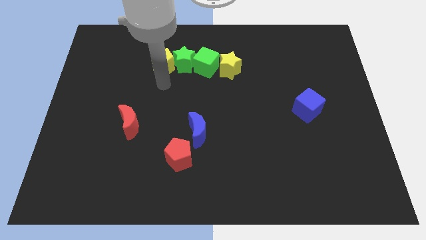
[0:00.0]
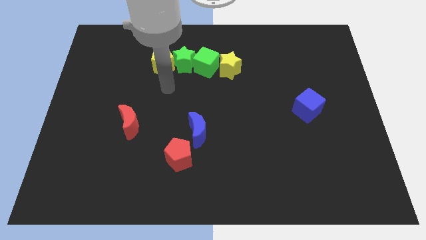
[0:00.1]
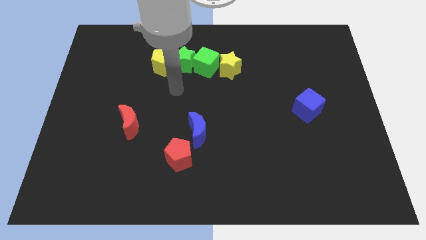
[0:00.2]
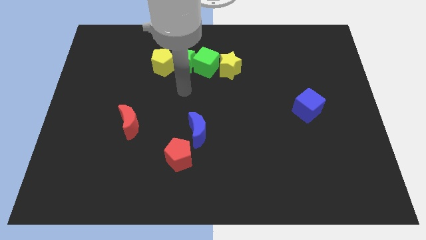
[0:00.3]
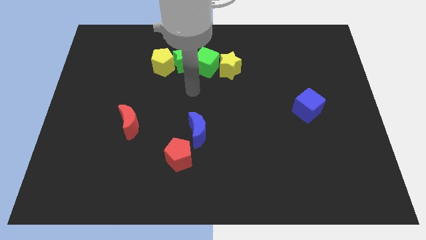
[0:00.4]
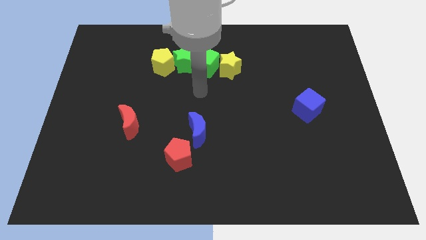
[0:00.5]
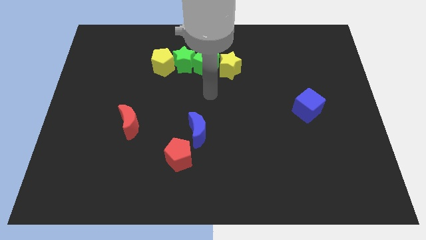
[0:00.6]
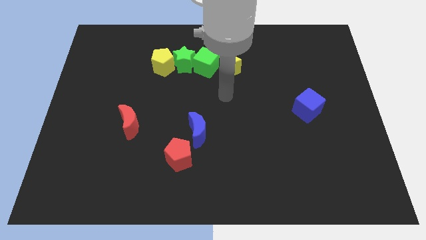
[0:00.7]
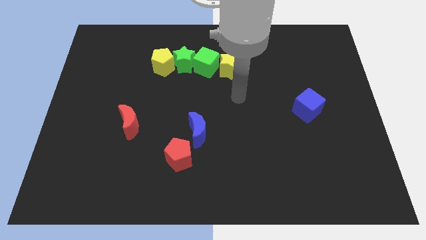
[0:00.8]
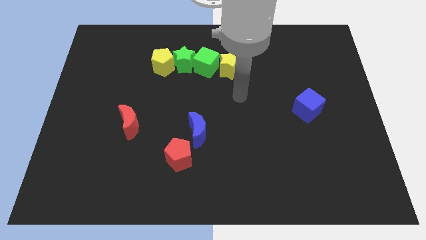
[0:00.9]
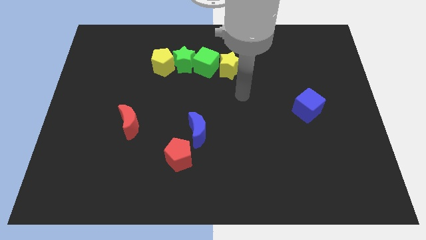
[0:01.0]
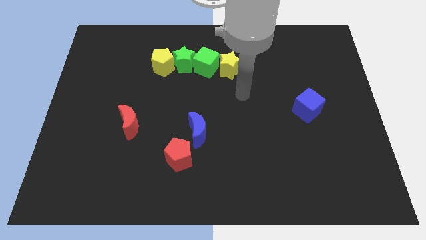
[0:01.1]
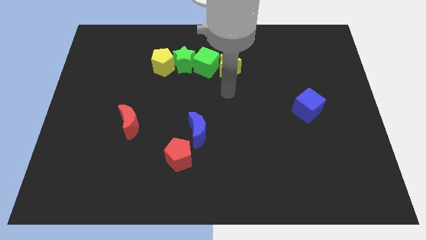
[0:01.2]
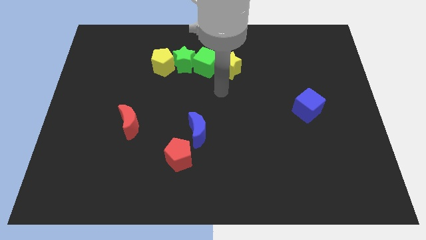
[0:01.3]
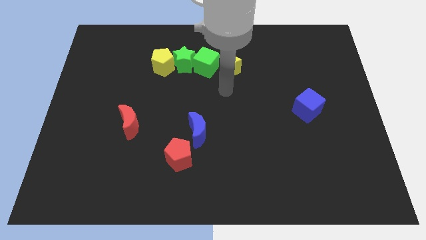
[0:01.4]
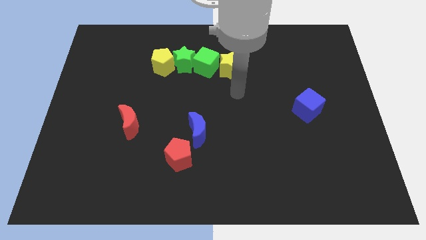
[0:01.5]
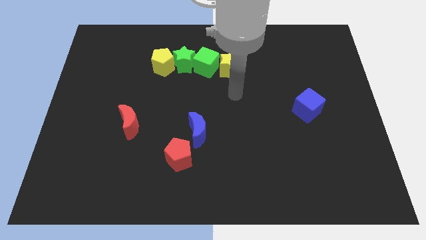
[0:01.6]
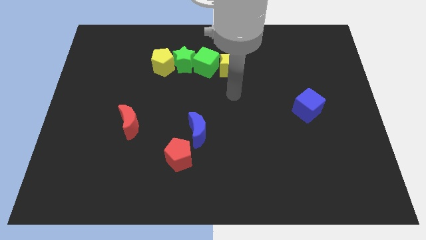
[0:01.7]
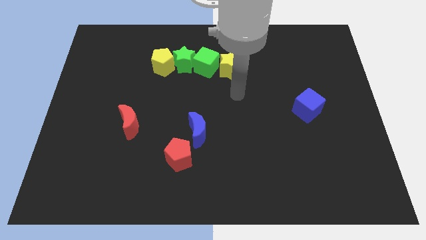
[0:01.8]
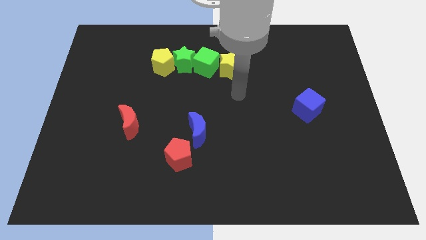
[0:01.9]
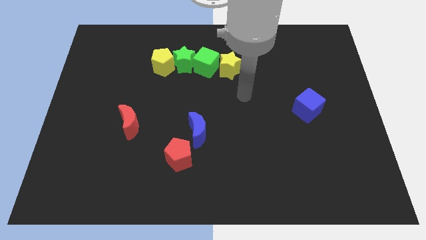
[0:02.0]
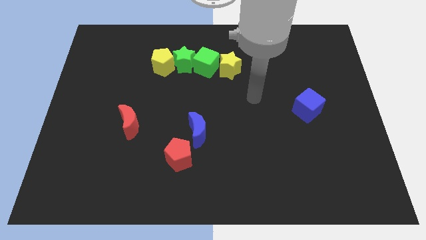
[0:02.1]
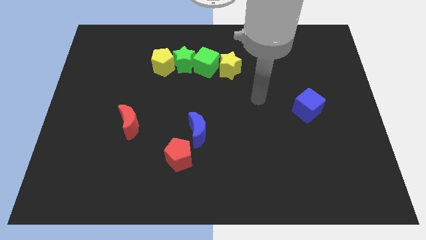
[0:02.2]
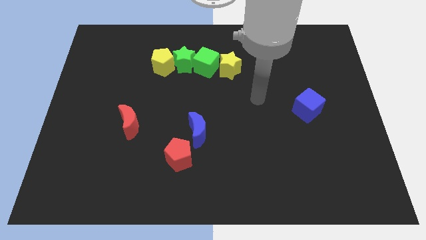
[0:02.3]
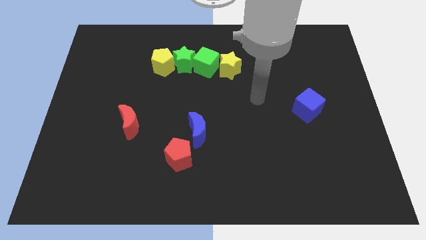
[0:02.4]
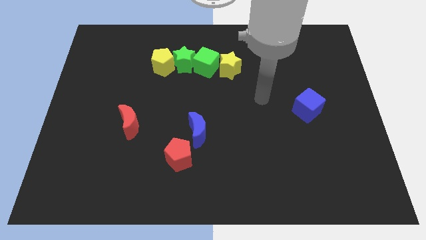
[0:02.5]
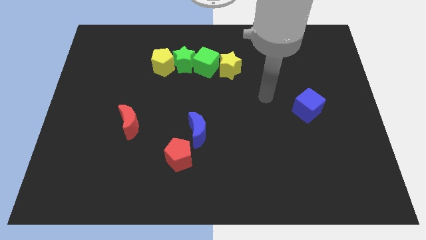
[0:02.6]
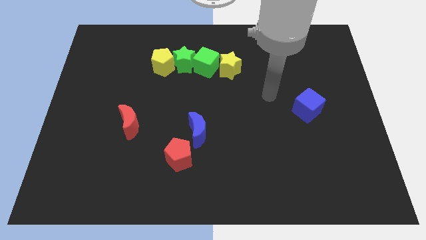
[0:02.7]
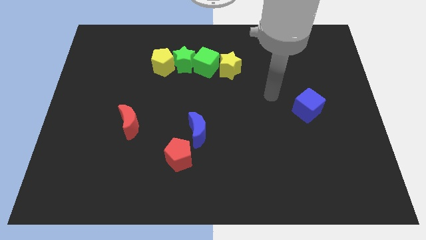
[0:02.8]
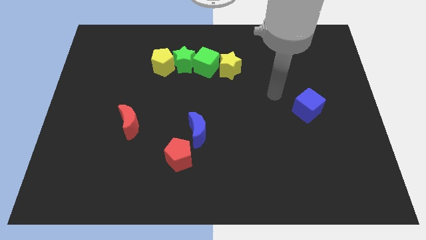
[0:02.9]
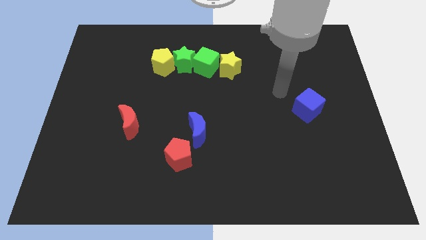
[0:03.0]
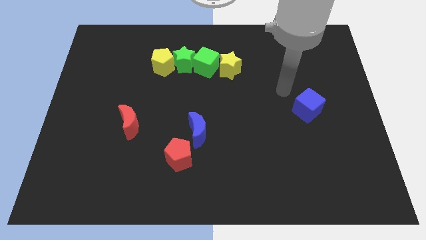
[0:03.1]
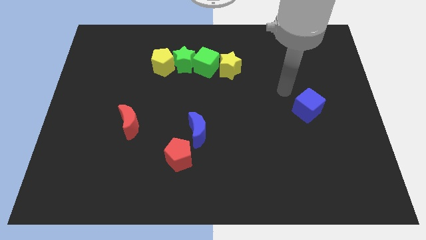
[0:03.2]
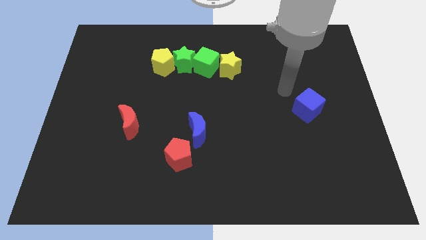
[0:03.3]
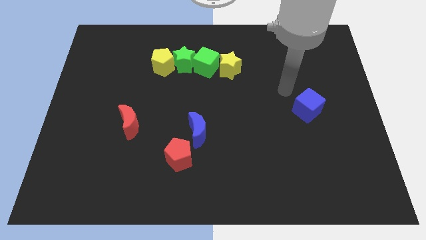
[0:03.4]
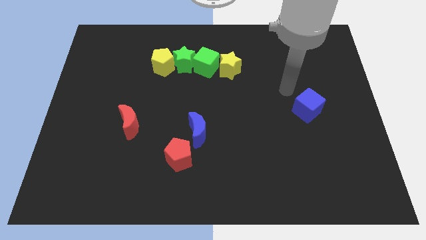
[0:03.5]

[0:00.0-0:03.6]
move your arm to the top left of the blue cube

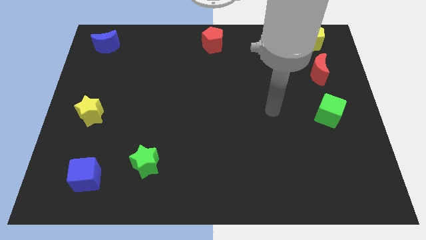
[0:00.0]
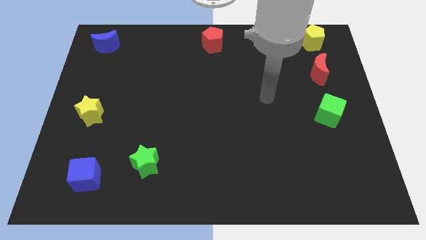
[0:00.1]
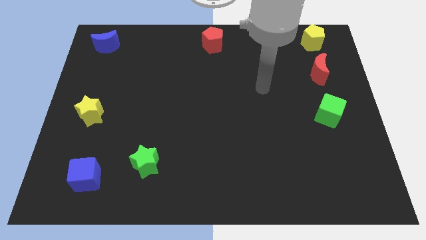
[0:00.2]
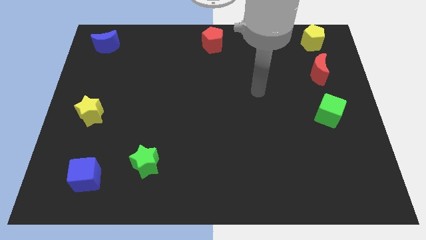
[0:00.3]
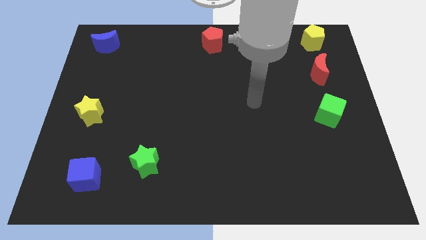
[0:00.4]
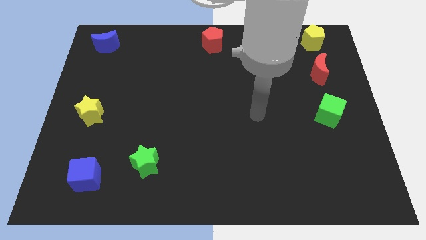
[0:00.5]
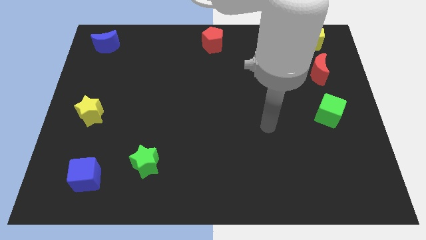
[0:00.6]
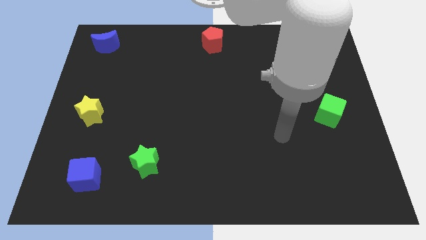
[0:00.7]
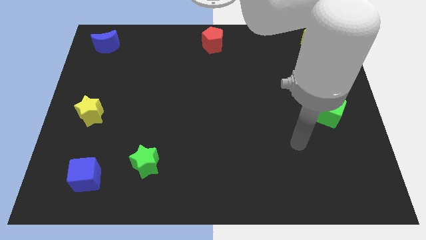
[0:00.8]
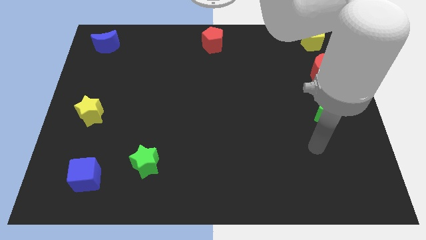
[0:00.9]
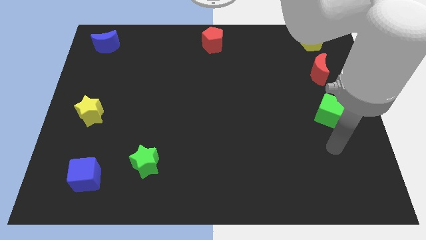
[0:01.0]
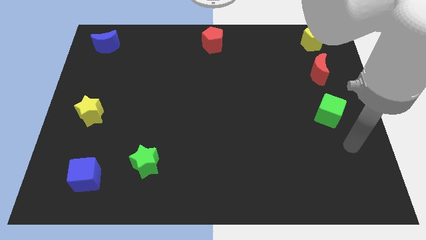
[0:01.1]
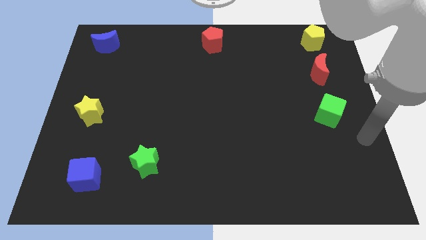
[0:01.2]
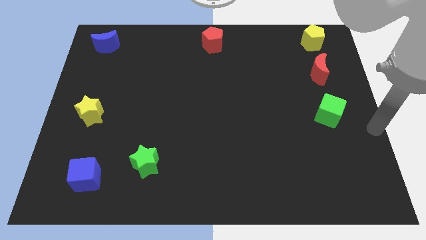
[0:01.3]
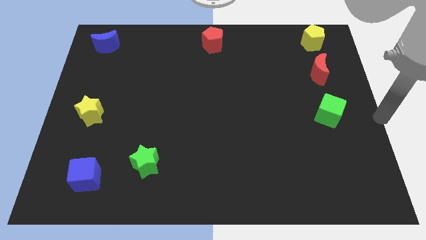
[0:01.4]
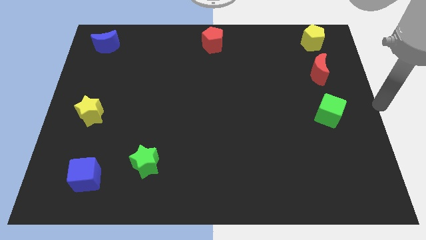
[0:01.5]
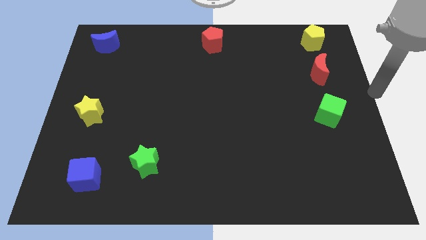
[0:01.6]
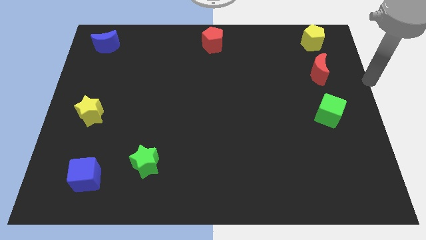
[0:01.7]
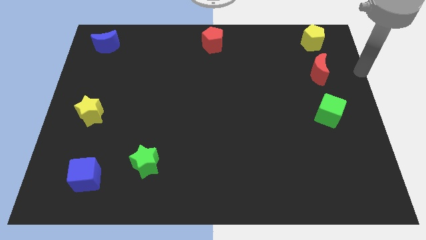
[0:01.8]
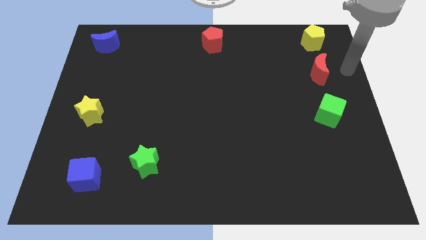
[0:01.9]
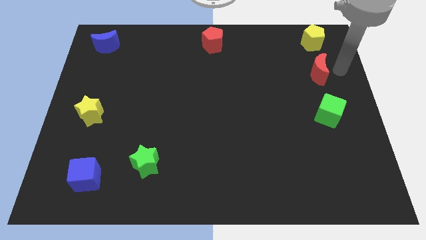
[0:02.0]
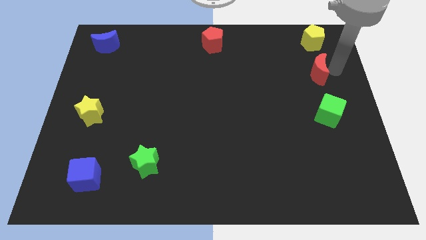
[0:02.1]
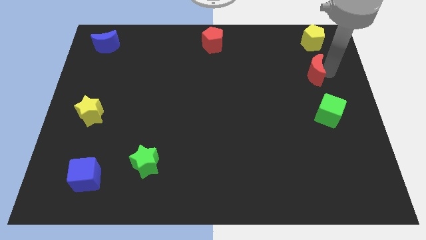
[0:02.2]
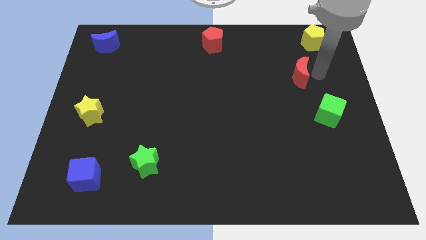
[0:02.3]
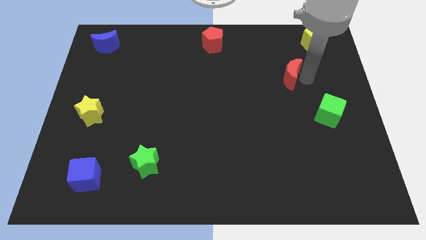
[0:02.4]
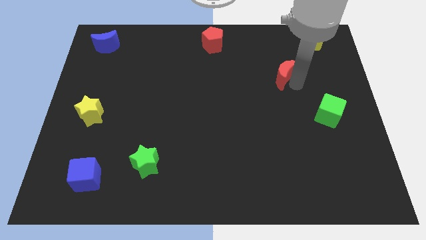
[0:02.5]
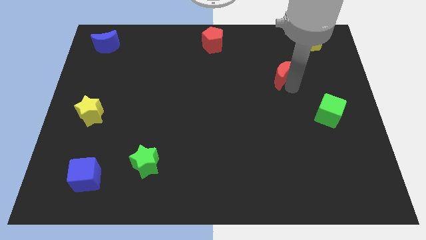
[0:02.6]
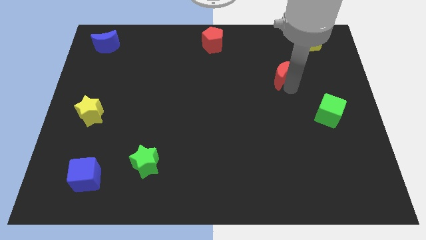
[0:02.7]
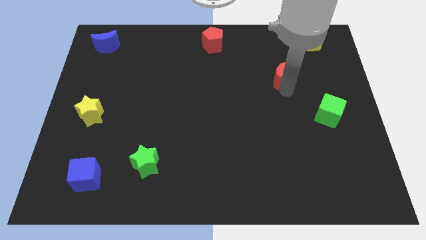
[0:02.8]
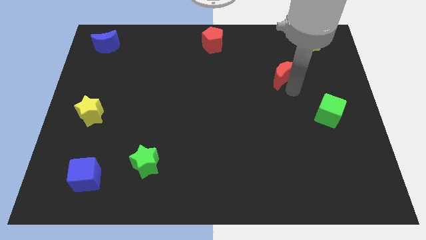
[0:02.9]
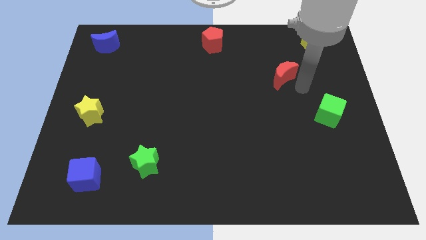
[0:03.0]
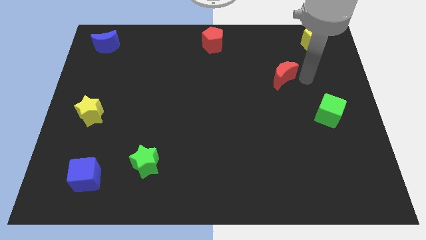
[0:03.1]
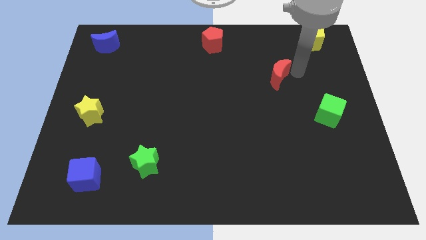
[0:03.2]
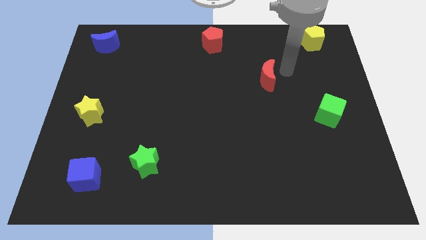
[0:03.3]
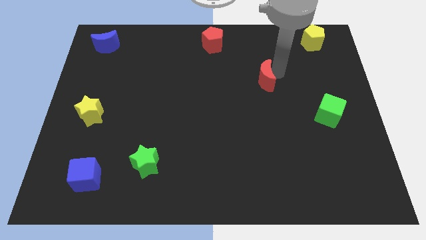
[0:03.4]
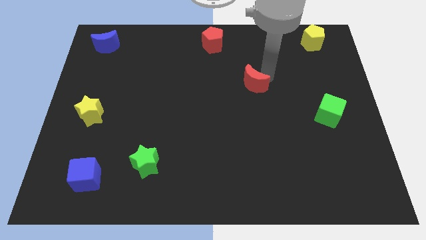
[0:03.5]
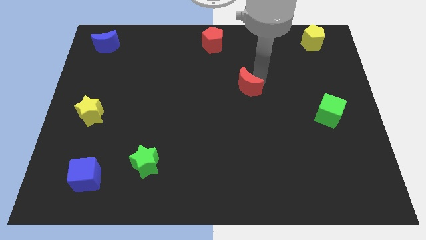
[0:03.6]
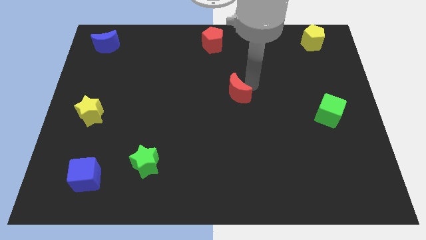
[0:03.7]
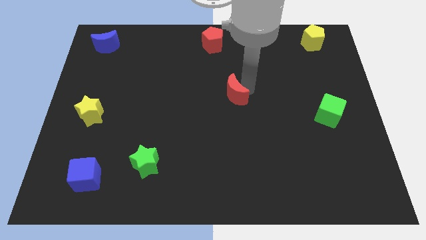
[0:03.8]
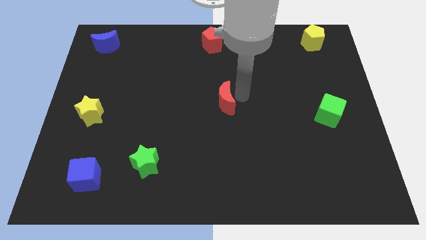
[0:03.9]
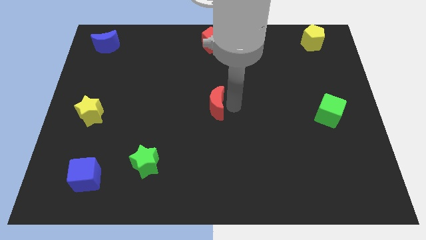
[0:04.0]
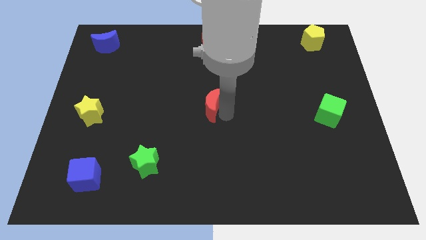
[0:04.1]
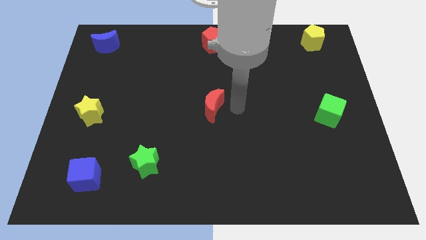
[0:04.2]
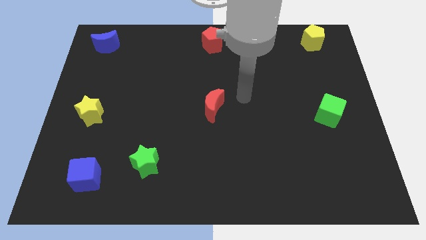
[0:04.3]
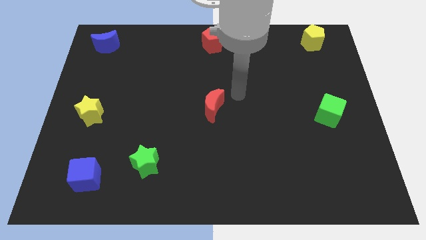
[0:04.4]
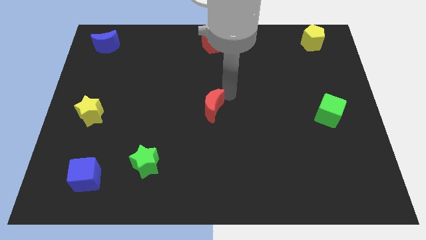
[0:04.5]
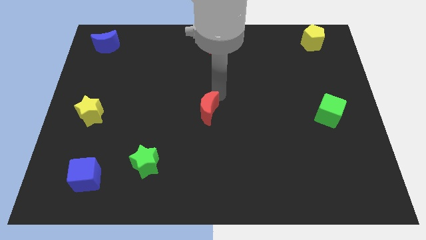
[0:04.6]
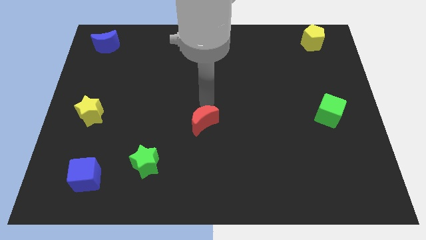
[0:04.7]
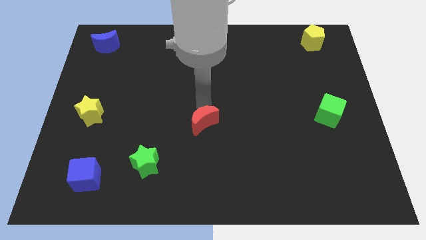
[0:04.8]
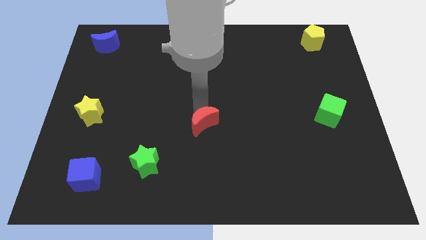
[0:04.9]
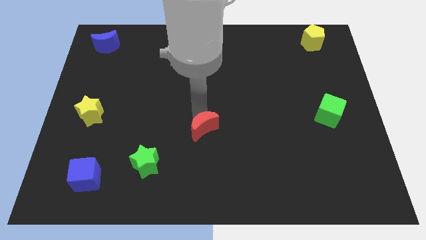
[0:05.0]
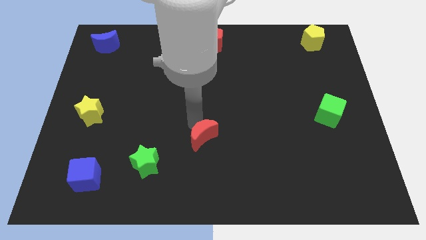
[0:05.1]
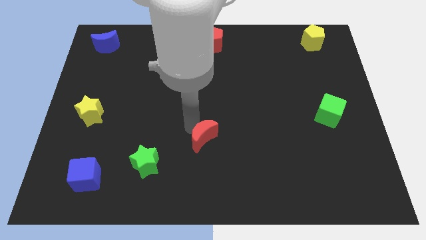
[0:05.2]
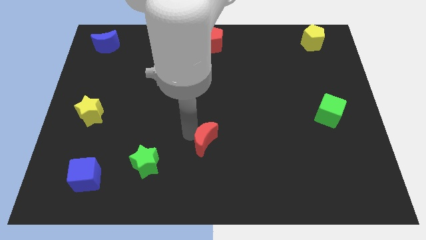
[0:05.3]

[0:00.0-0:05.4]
move the red crescent towards the right side of the green star

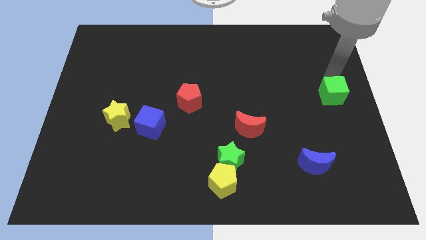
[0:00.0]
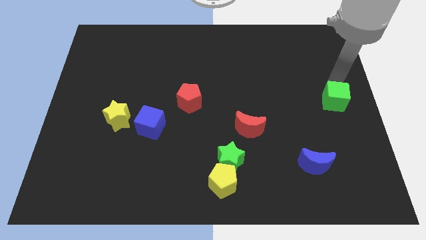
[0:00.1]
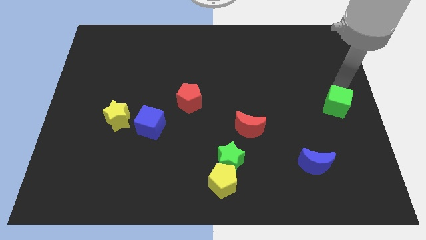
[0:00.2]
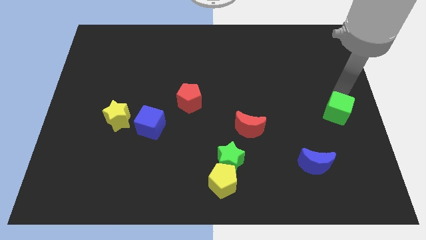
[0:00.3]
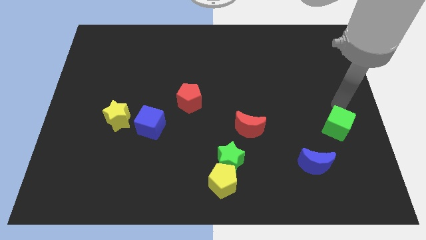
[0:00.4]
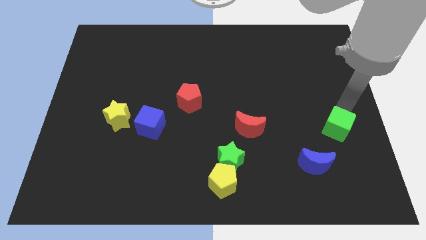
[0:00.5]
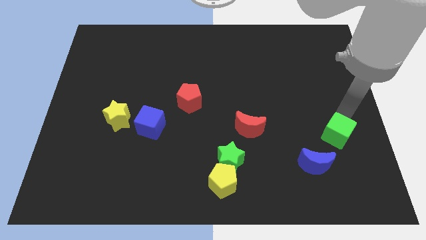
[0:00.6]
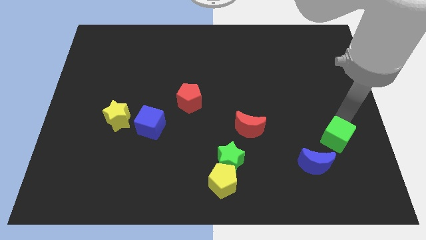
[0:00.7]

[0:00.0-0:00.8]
place green cube to the top right of blue moon
